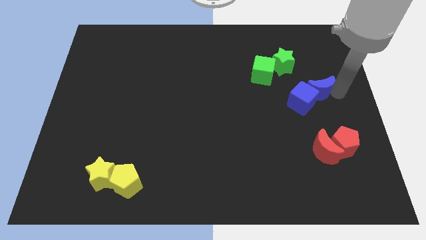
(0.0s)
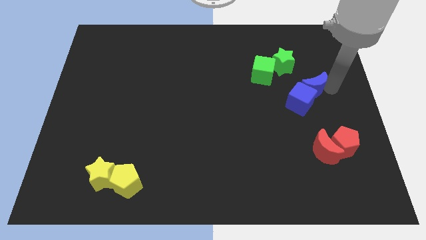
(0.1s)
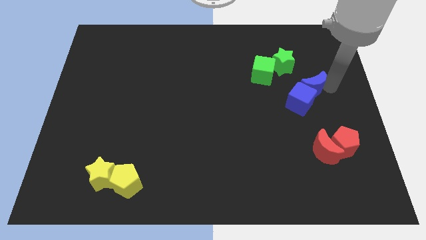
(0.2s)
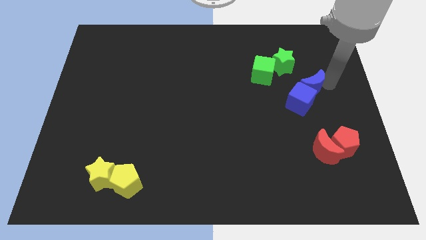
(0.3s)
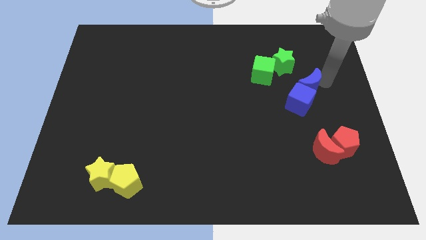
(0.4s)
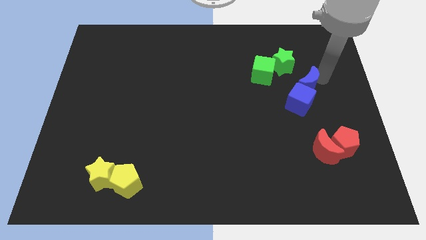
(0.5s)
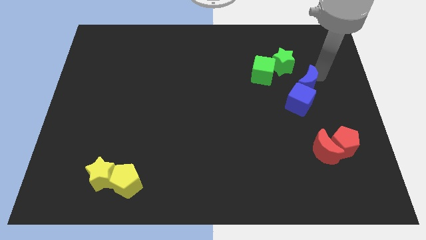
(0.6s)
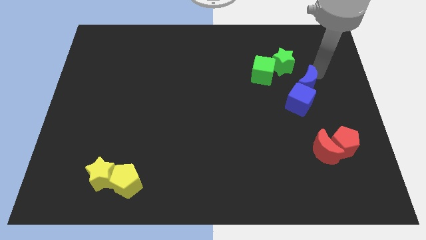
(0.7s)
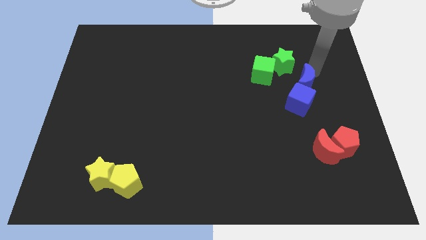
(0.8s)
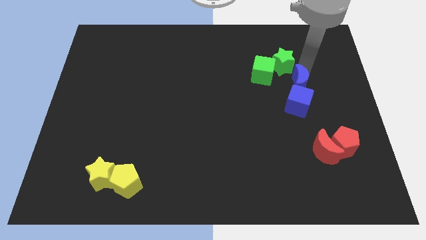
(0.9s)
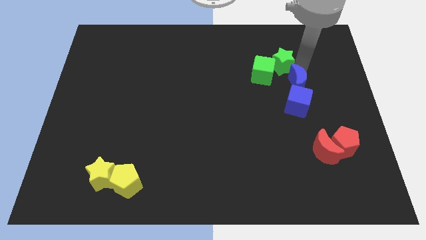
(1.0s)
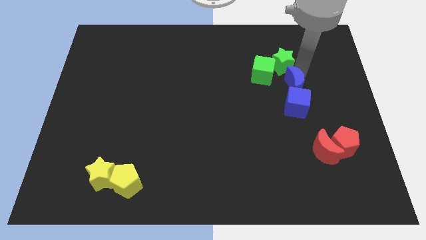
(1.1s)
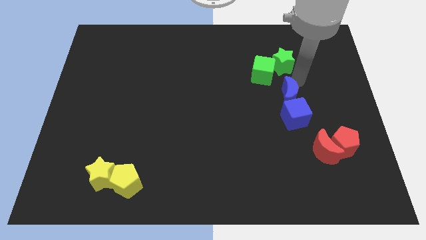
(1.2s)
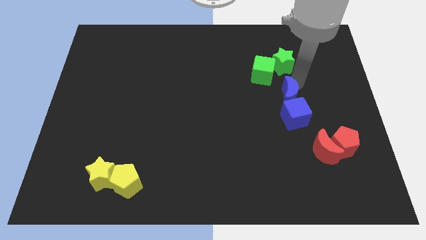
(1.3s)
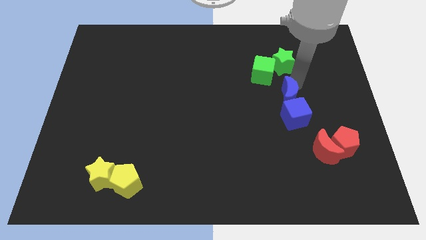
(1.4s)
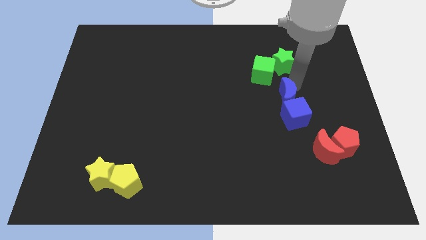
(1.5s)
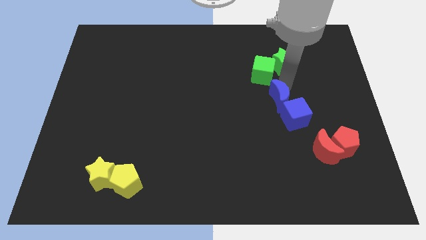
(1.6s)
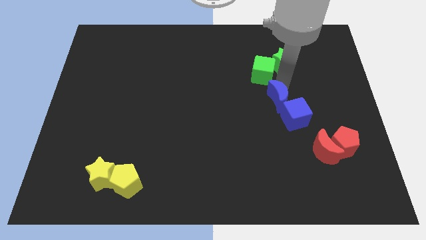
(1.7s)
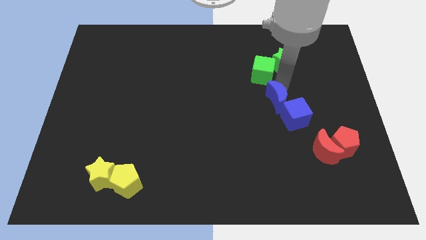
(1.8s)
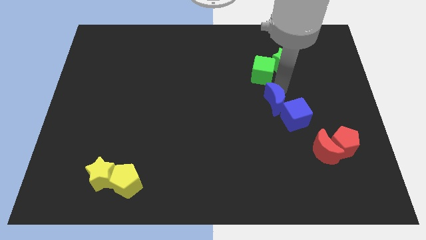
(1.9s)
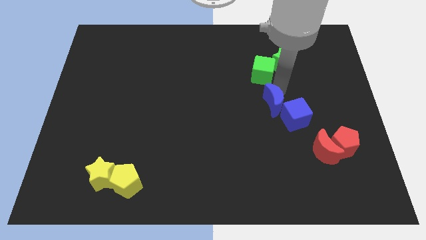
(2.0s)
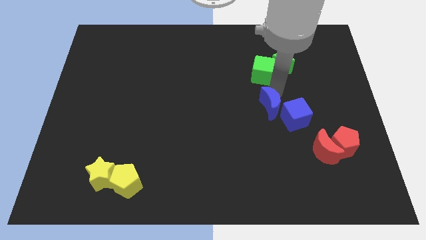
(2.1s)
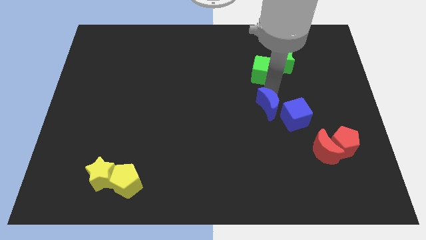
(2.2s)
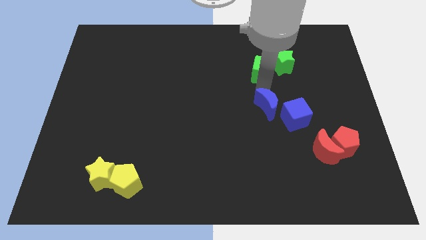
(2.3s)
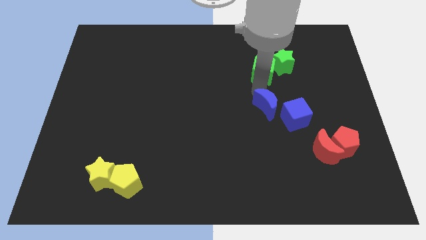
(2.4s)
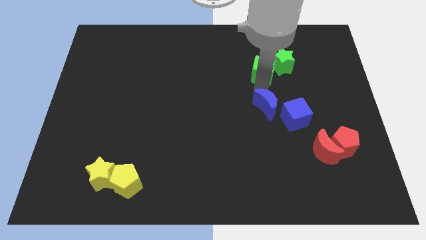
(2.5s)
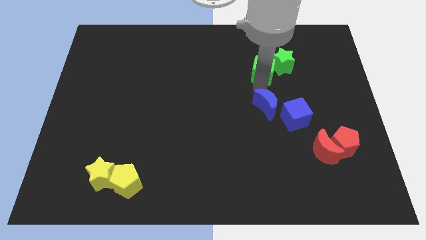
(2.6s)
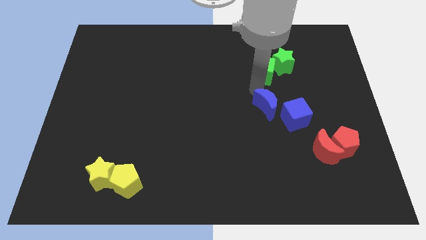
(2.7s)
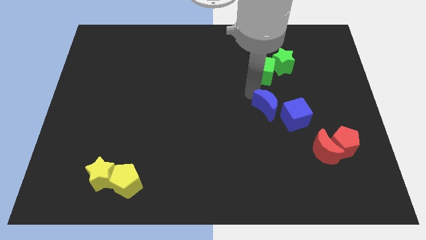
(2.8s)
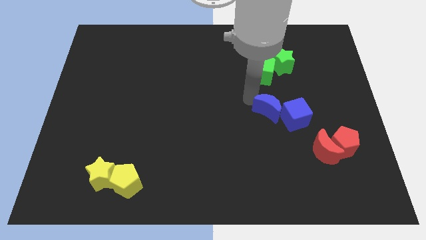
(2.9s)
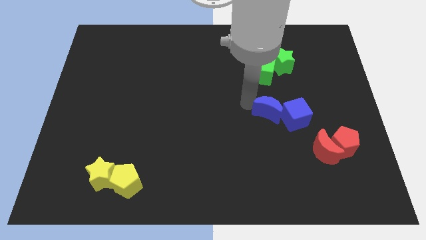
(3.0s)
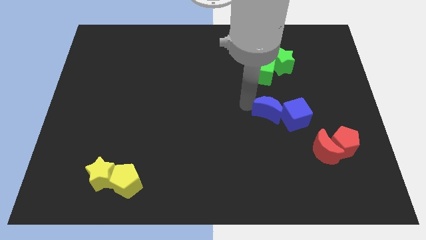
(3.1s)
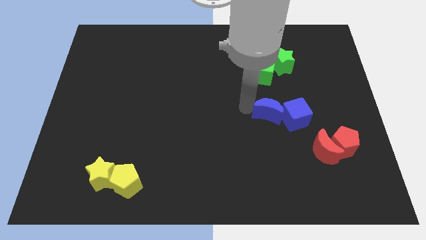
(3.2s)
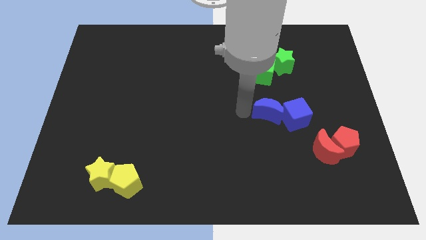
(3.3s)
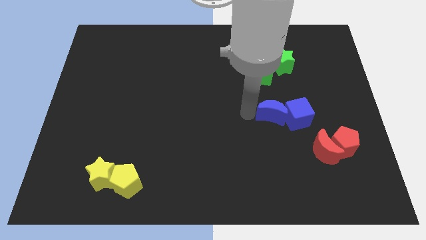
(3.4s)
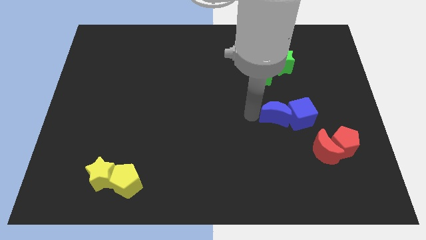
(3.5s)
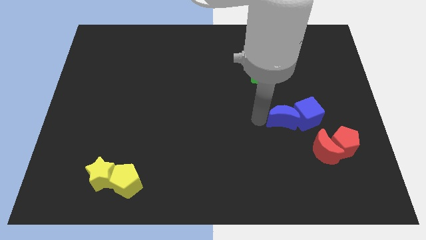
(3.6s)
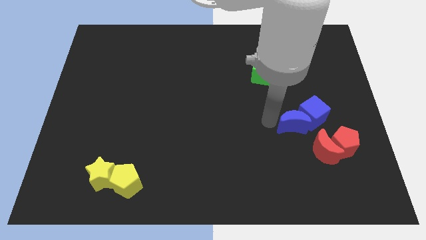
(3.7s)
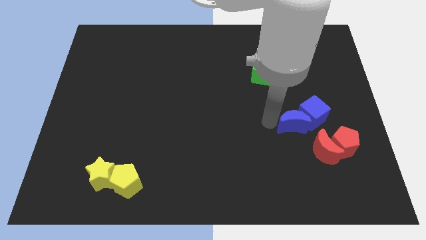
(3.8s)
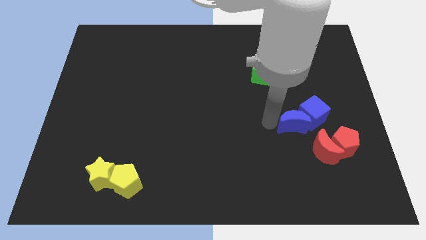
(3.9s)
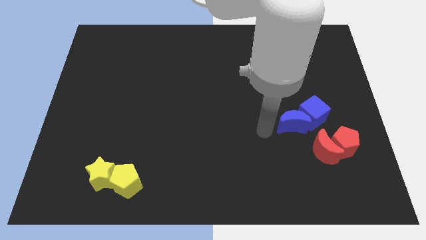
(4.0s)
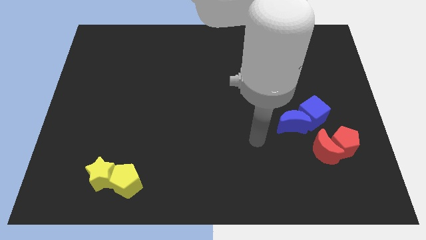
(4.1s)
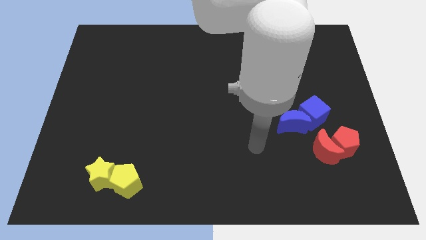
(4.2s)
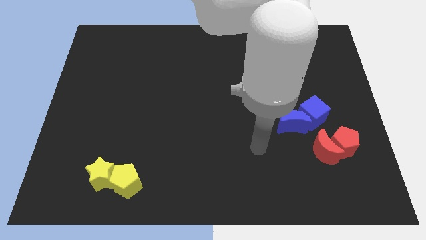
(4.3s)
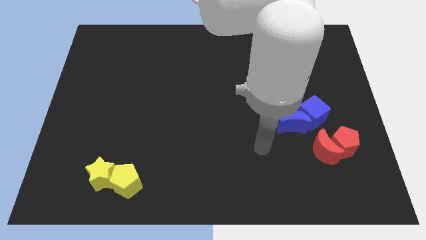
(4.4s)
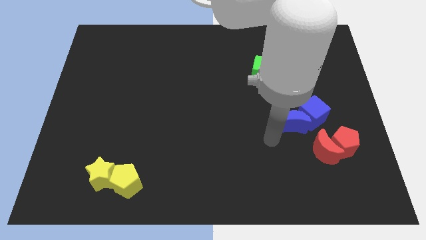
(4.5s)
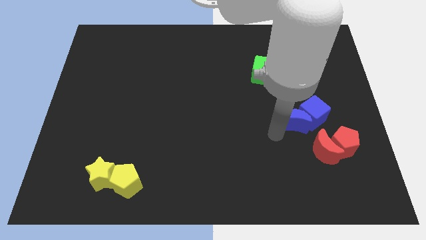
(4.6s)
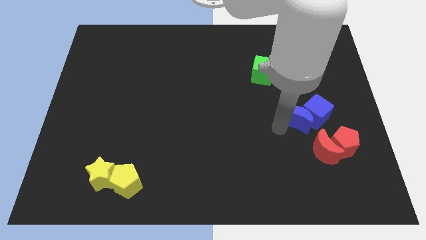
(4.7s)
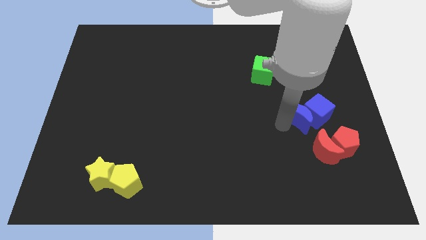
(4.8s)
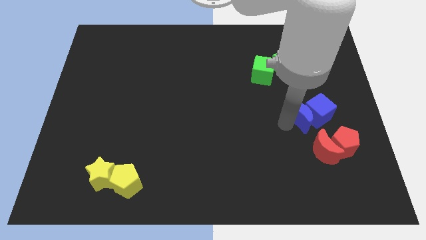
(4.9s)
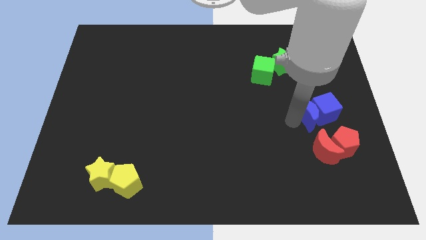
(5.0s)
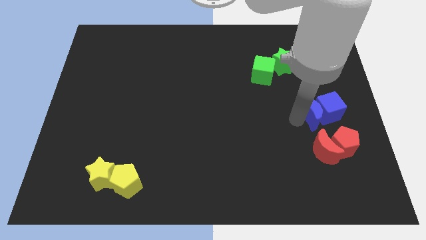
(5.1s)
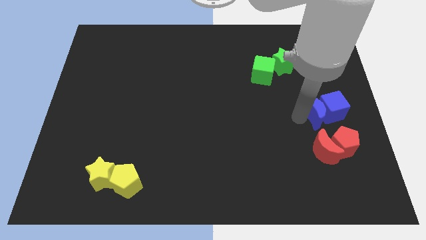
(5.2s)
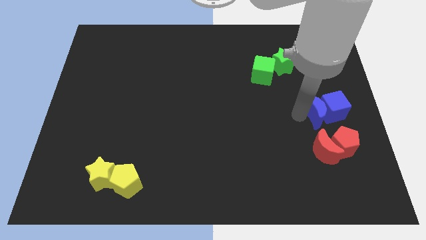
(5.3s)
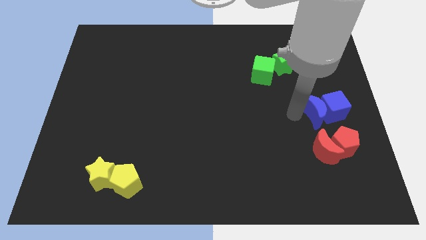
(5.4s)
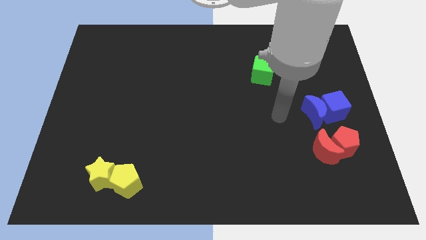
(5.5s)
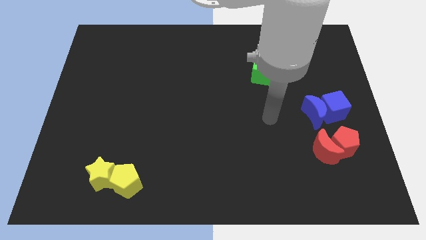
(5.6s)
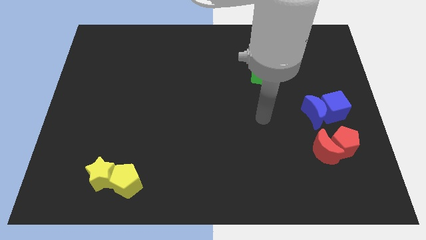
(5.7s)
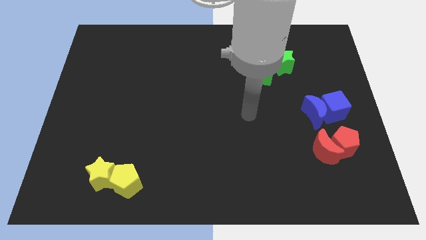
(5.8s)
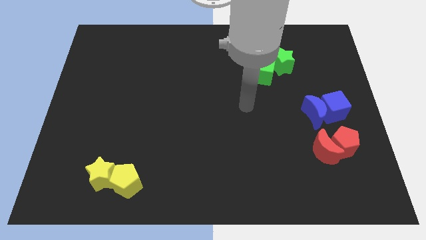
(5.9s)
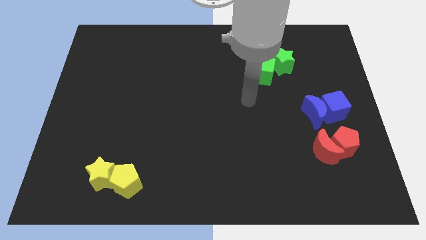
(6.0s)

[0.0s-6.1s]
put the blue blocks above the red blocks

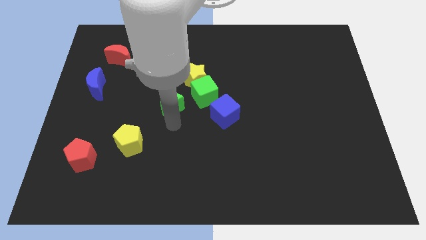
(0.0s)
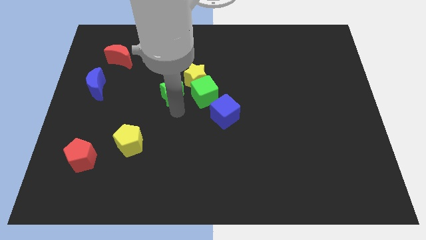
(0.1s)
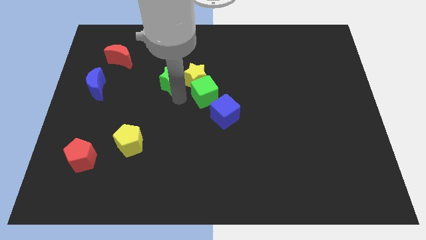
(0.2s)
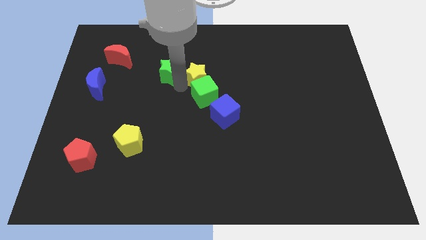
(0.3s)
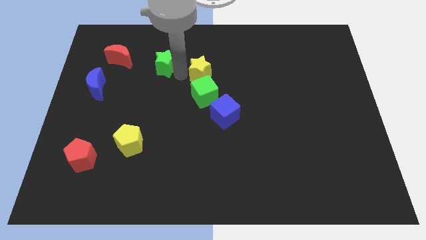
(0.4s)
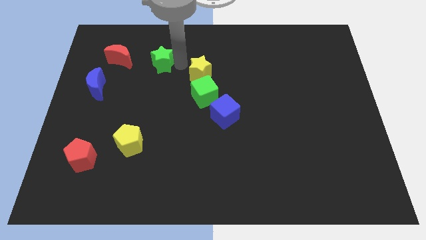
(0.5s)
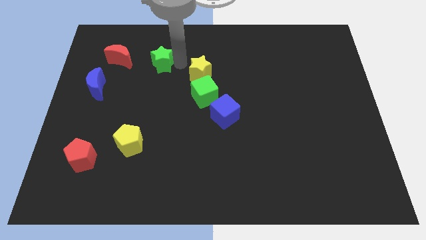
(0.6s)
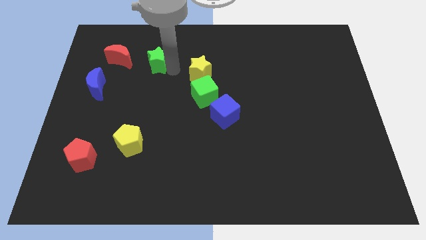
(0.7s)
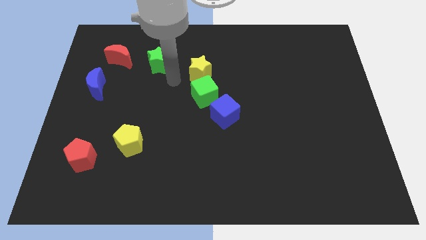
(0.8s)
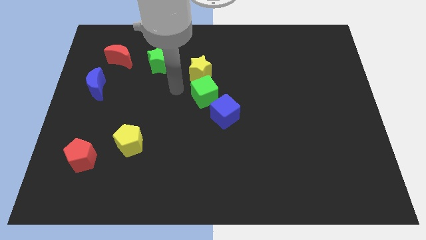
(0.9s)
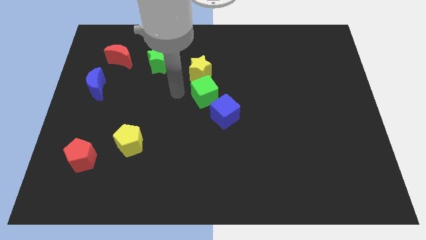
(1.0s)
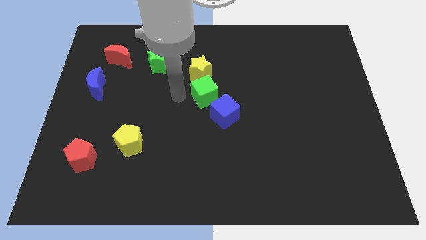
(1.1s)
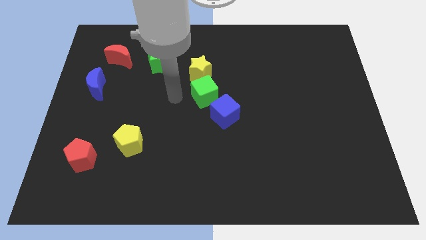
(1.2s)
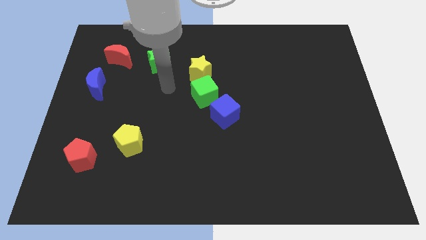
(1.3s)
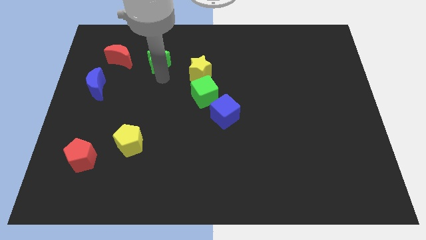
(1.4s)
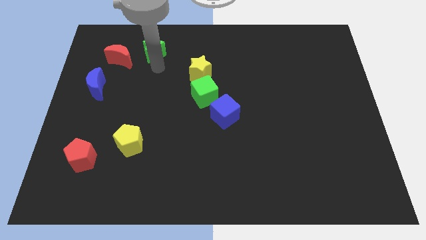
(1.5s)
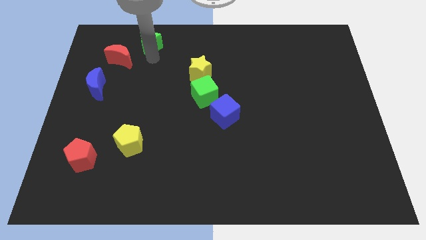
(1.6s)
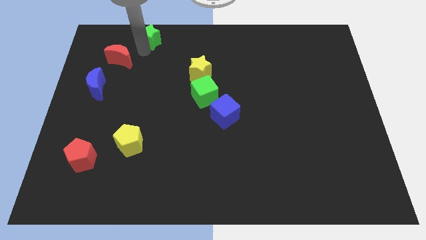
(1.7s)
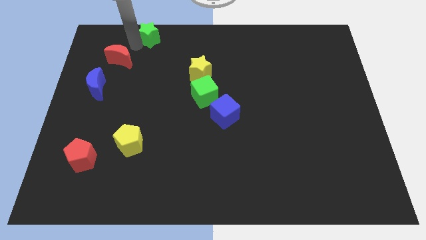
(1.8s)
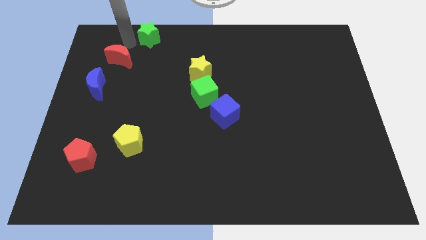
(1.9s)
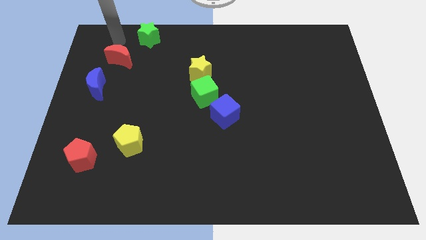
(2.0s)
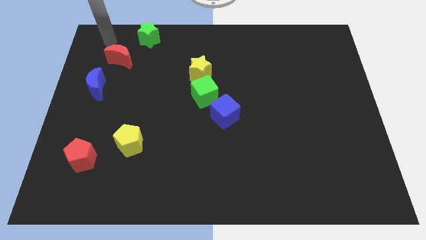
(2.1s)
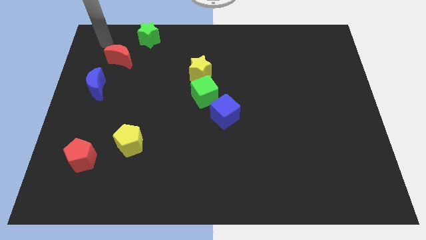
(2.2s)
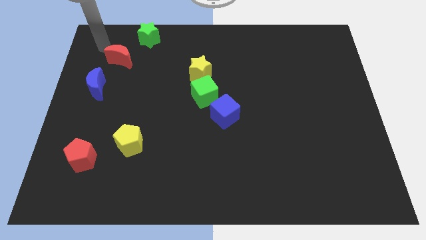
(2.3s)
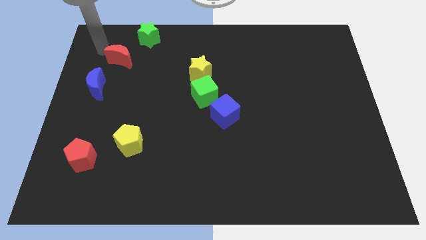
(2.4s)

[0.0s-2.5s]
move the green star towards the top side

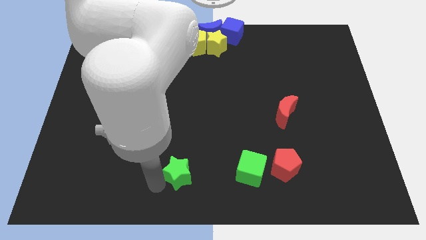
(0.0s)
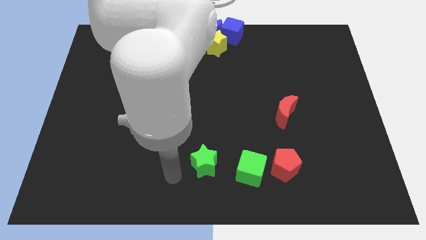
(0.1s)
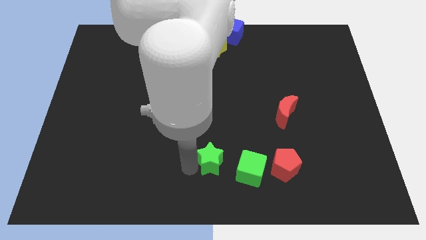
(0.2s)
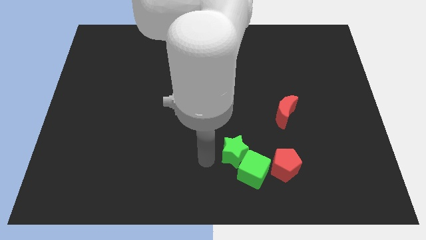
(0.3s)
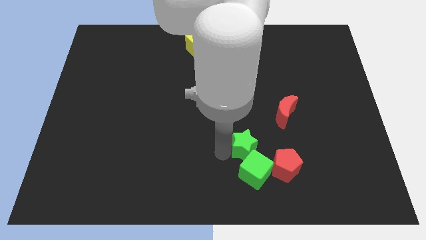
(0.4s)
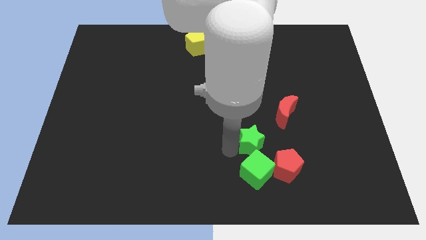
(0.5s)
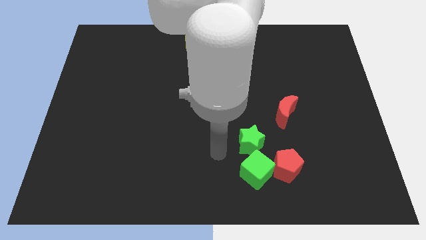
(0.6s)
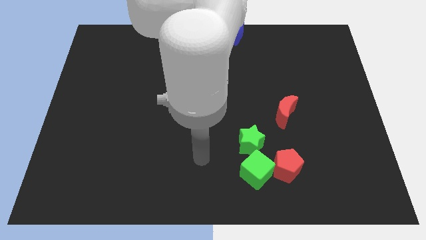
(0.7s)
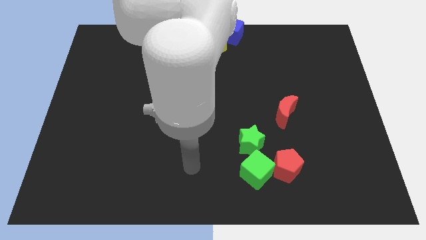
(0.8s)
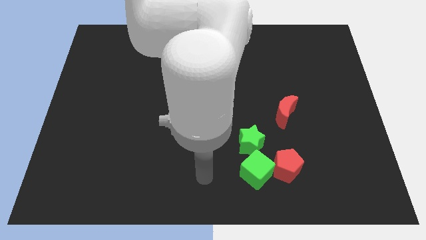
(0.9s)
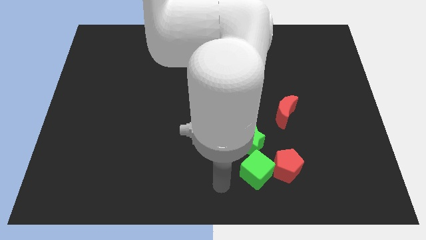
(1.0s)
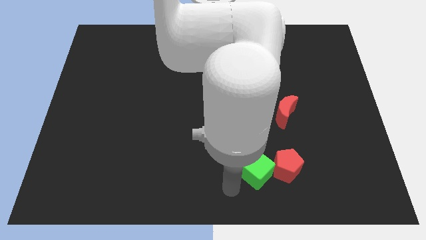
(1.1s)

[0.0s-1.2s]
place green star above the green cube
